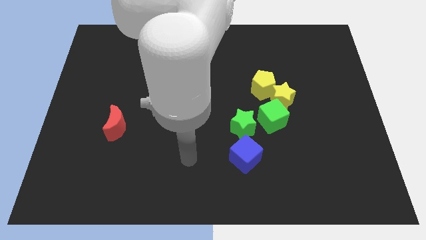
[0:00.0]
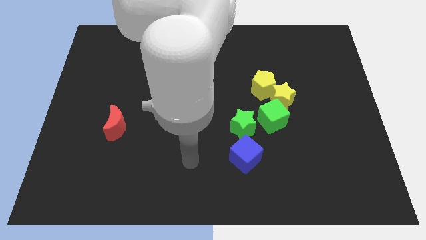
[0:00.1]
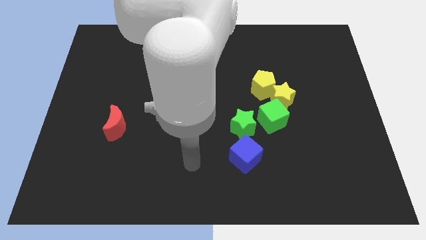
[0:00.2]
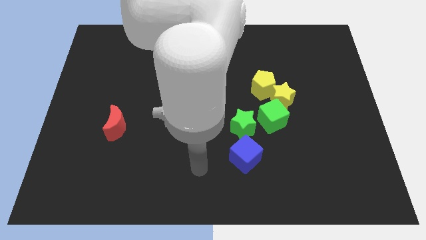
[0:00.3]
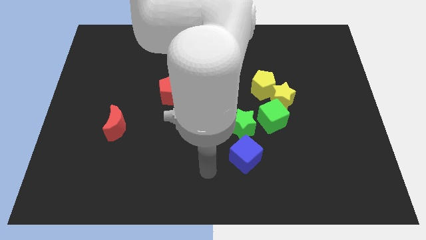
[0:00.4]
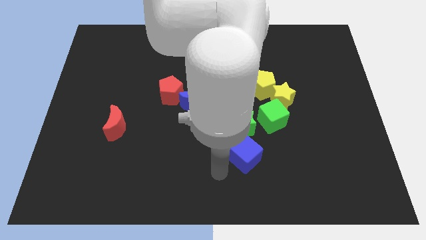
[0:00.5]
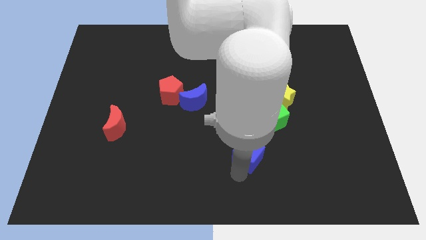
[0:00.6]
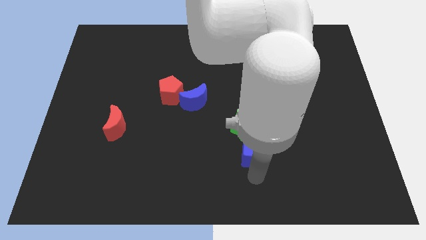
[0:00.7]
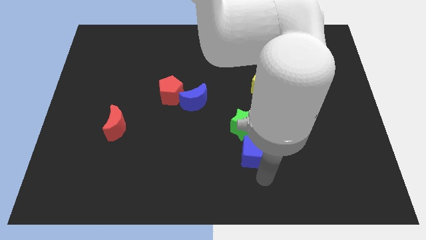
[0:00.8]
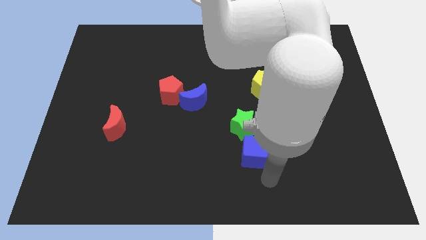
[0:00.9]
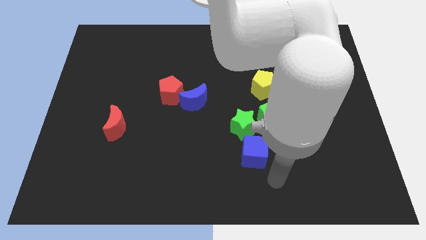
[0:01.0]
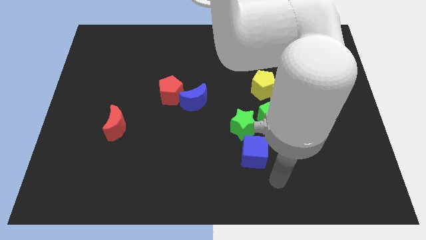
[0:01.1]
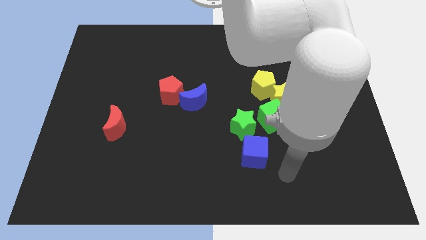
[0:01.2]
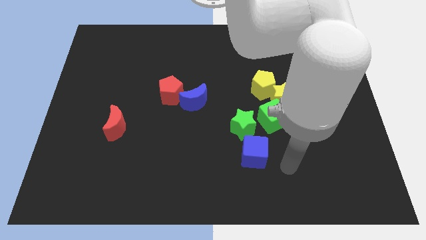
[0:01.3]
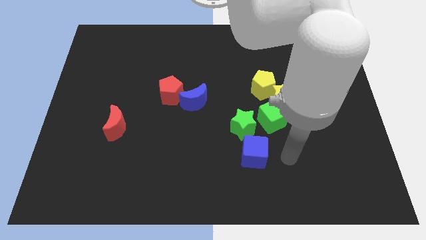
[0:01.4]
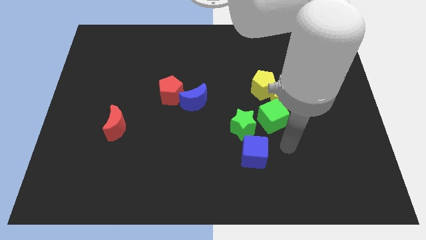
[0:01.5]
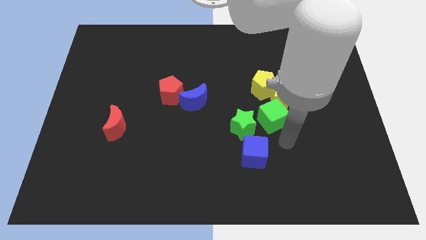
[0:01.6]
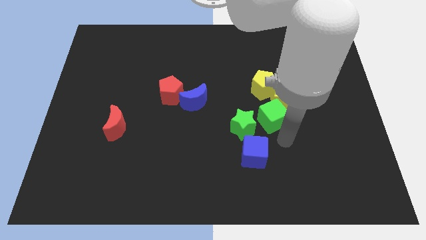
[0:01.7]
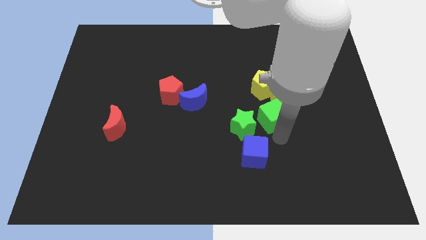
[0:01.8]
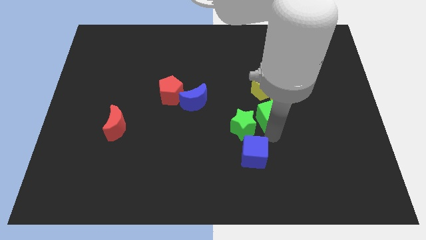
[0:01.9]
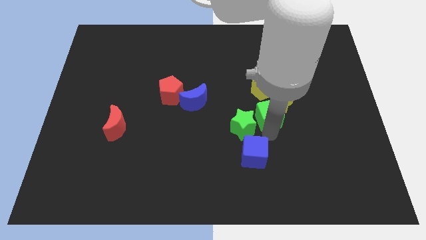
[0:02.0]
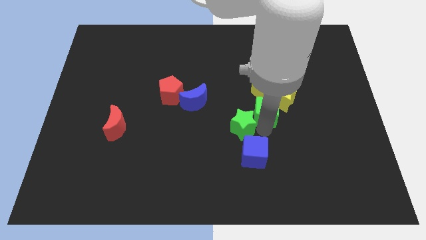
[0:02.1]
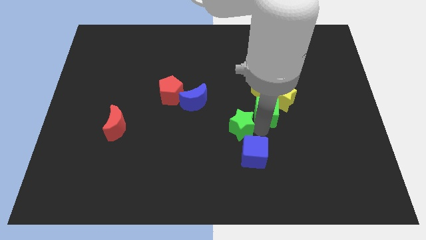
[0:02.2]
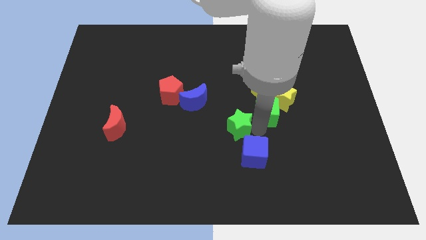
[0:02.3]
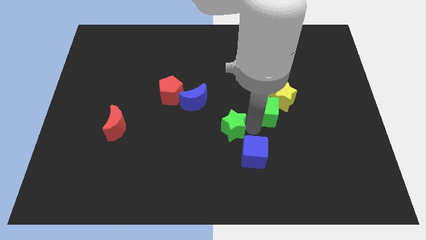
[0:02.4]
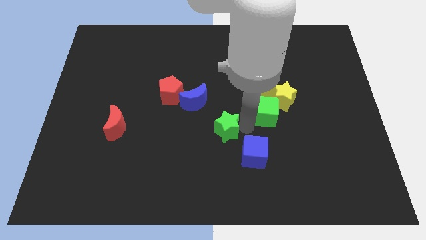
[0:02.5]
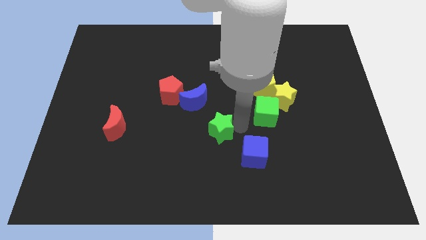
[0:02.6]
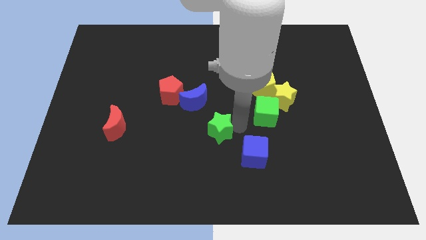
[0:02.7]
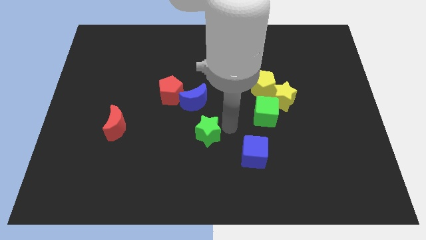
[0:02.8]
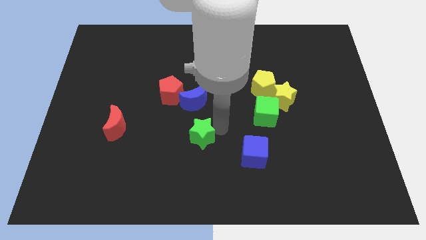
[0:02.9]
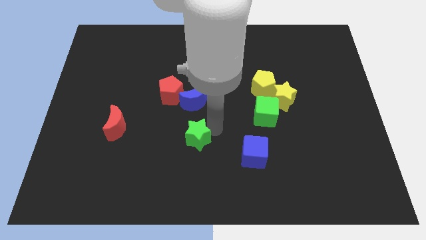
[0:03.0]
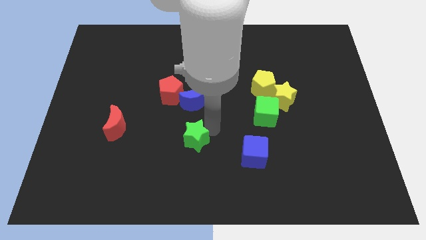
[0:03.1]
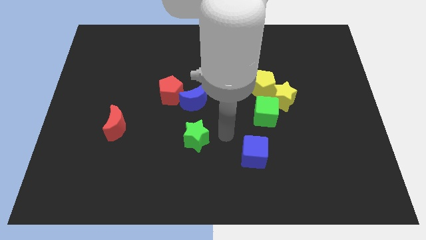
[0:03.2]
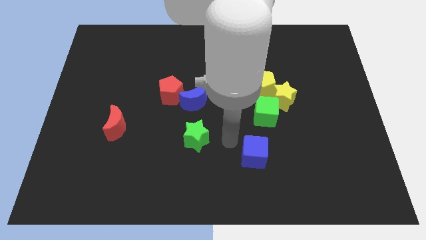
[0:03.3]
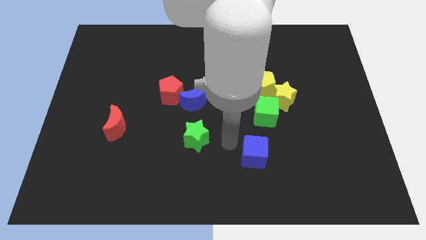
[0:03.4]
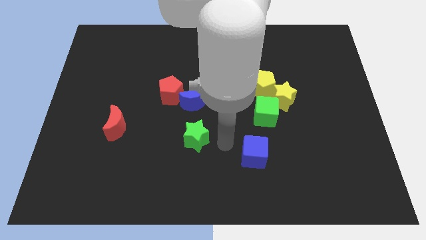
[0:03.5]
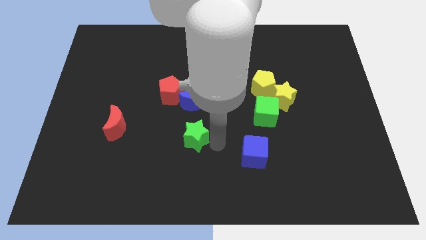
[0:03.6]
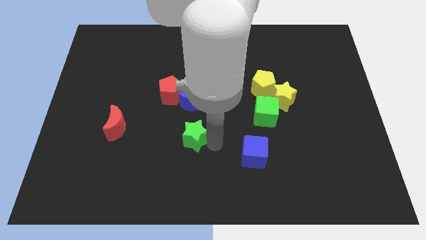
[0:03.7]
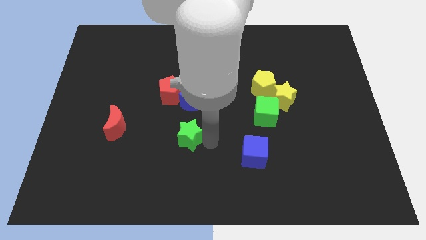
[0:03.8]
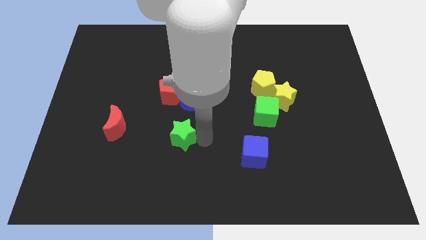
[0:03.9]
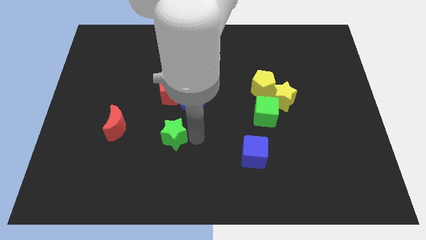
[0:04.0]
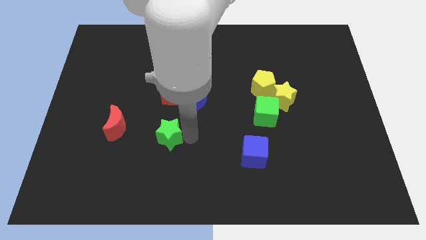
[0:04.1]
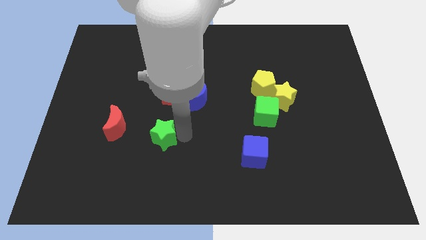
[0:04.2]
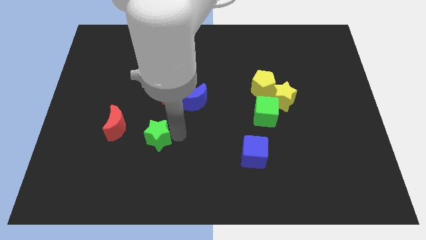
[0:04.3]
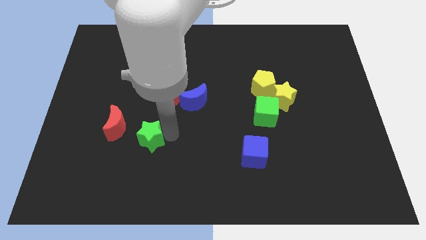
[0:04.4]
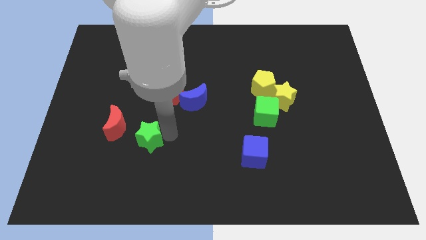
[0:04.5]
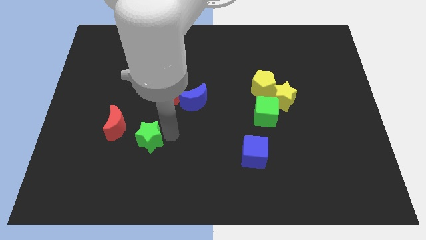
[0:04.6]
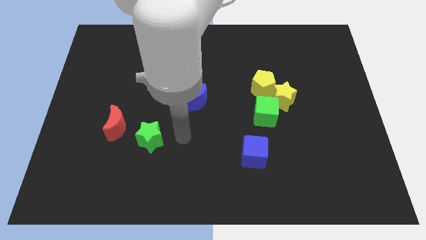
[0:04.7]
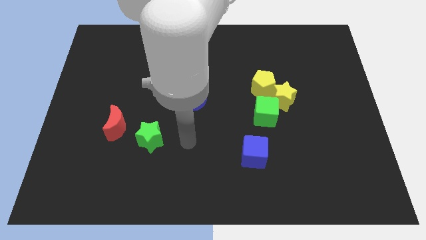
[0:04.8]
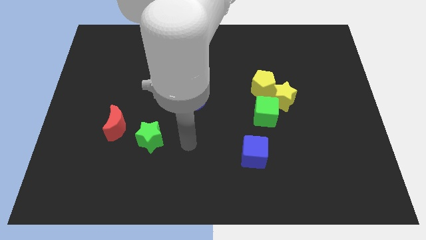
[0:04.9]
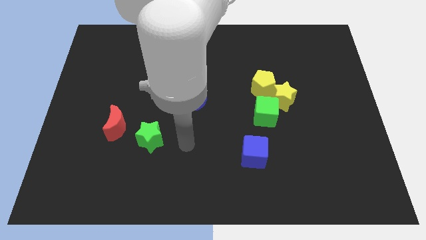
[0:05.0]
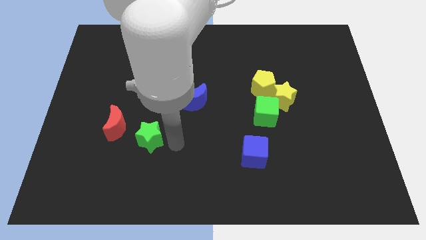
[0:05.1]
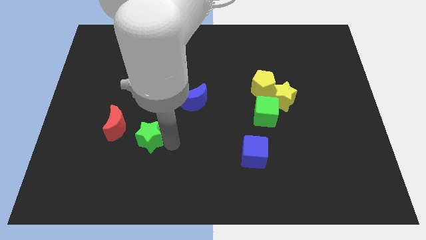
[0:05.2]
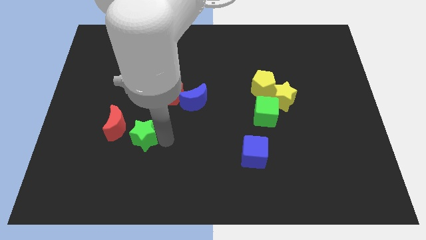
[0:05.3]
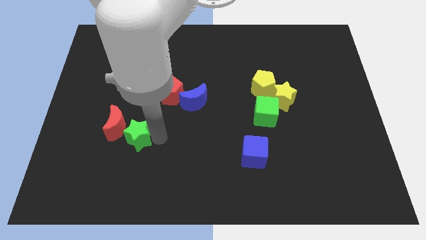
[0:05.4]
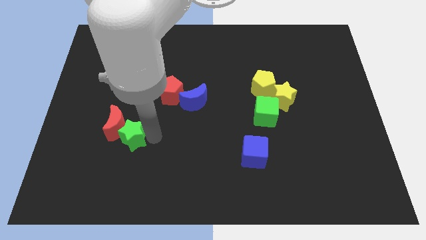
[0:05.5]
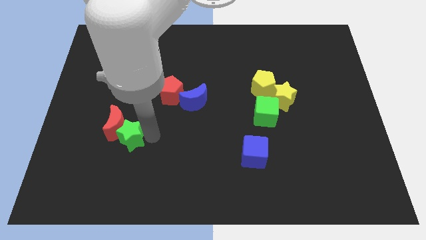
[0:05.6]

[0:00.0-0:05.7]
push the green star close to the red moon

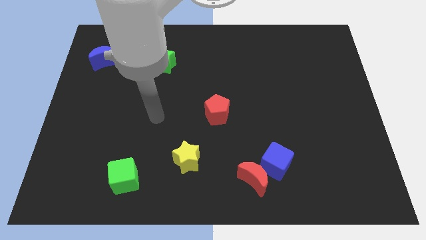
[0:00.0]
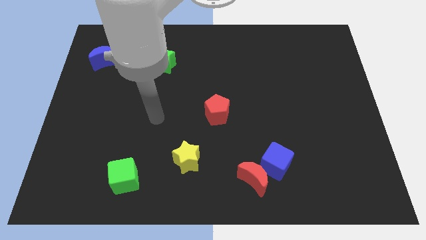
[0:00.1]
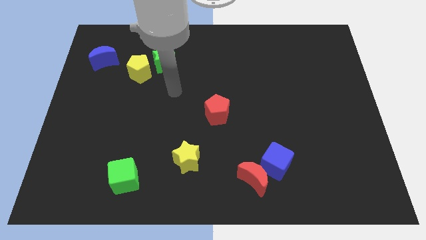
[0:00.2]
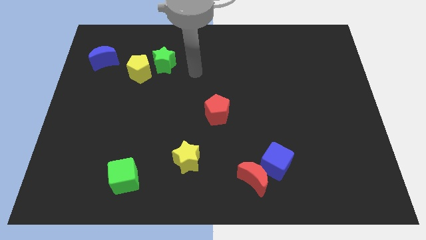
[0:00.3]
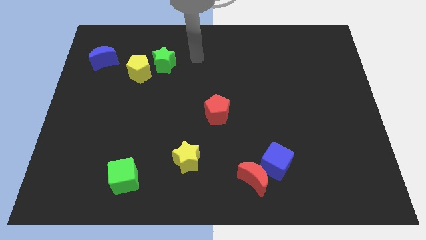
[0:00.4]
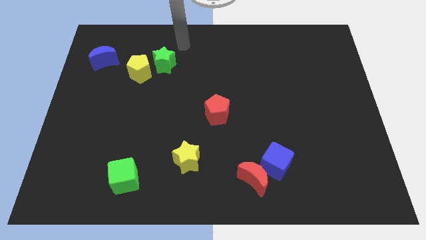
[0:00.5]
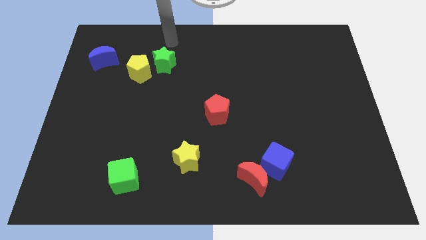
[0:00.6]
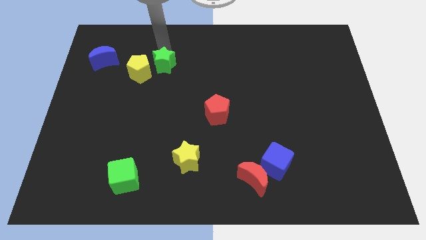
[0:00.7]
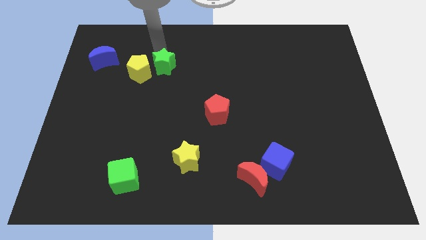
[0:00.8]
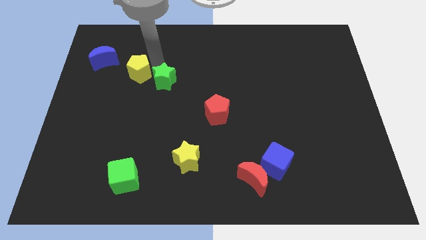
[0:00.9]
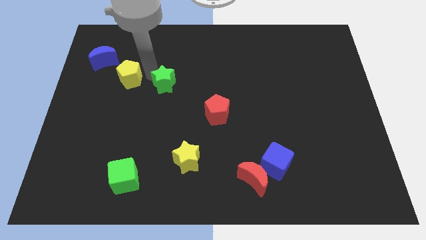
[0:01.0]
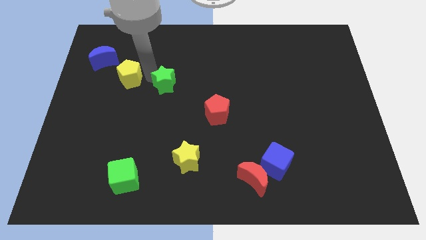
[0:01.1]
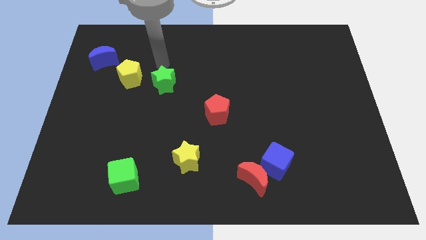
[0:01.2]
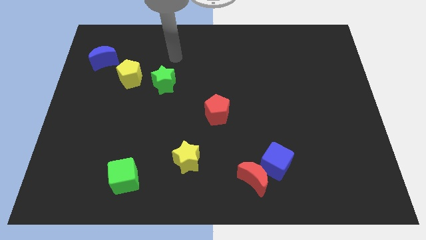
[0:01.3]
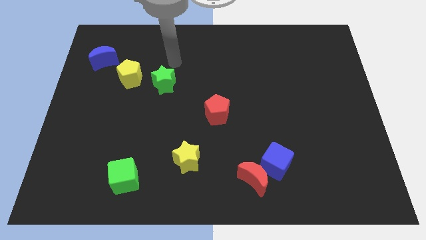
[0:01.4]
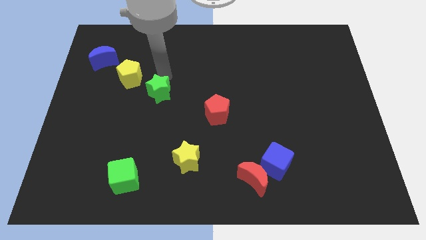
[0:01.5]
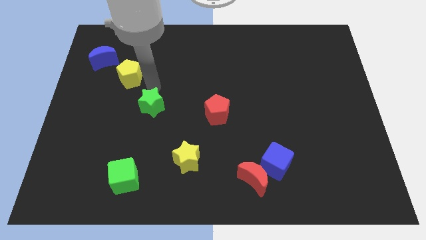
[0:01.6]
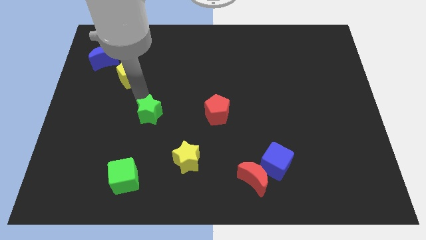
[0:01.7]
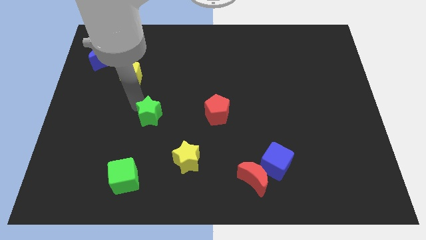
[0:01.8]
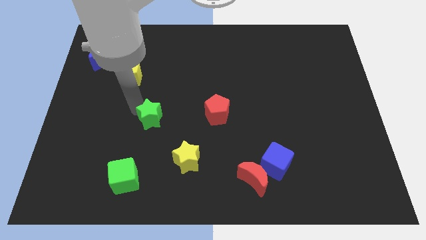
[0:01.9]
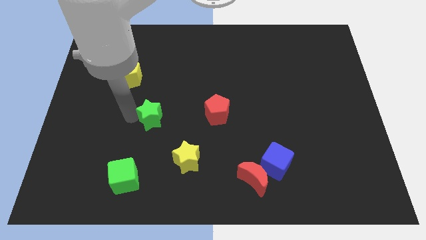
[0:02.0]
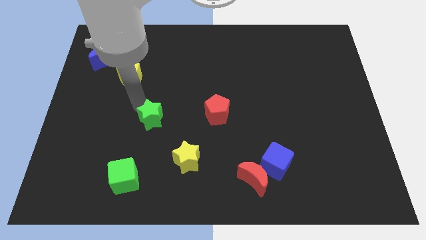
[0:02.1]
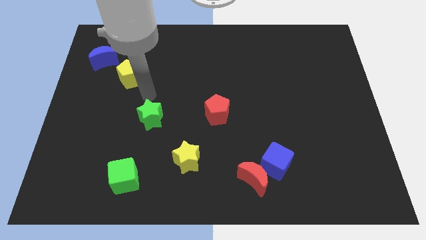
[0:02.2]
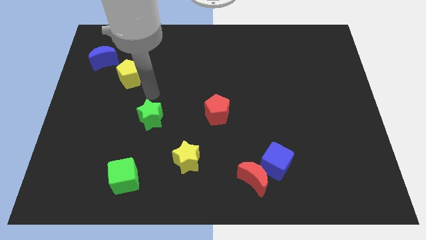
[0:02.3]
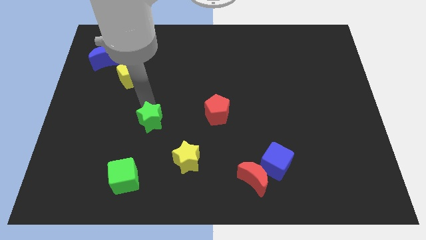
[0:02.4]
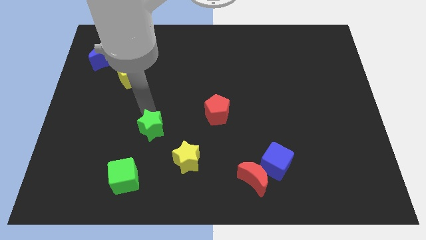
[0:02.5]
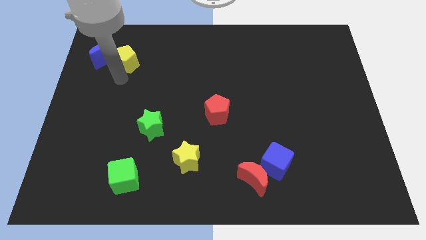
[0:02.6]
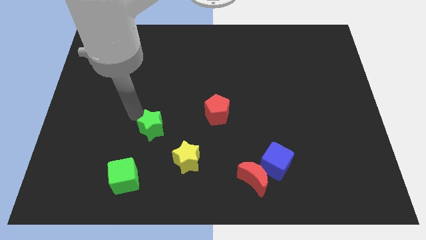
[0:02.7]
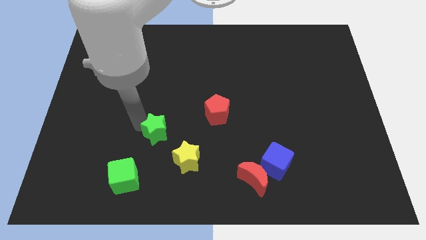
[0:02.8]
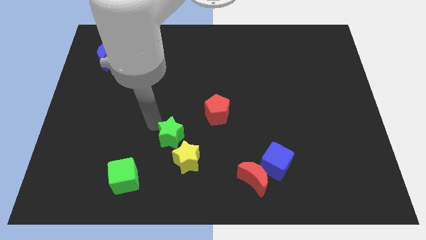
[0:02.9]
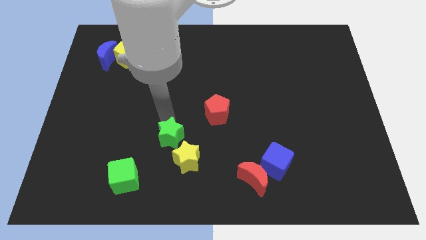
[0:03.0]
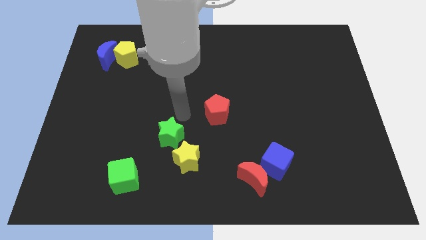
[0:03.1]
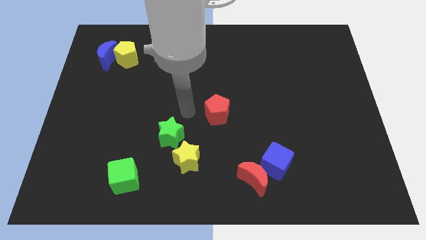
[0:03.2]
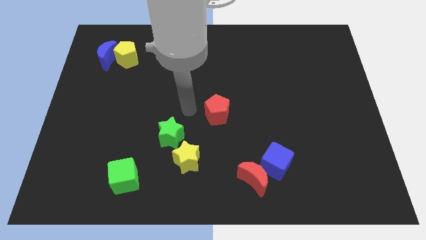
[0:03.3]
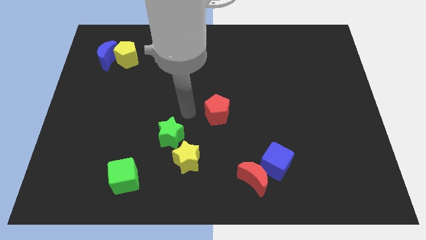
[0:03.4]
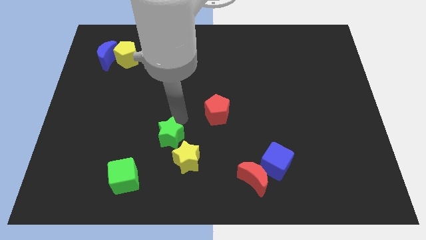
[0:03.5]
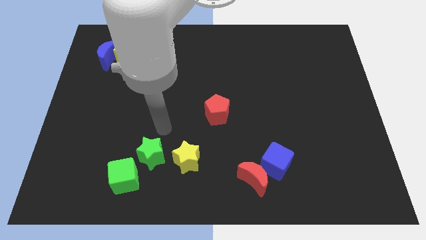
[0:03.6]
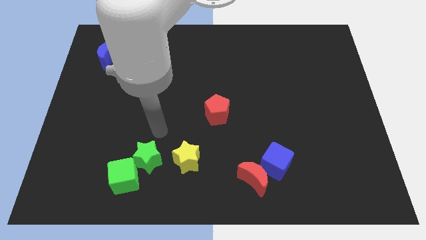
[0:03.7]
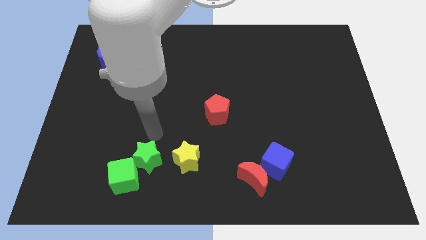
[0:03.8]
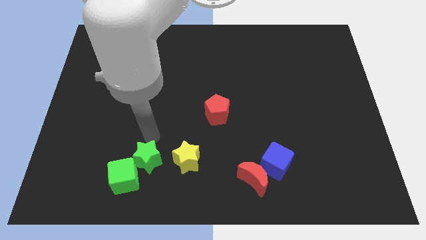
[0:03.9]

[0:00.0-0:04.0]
move the green star next to the green cube
